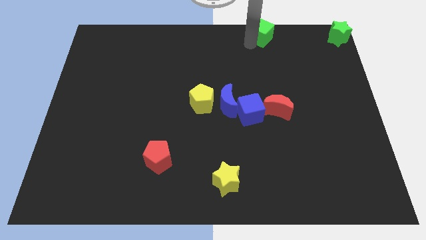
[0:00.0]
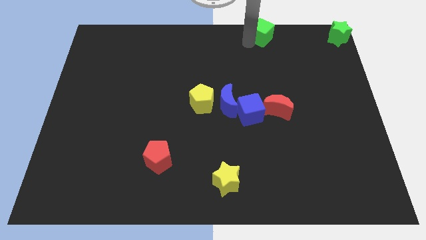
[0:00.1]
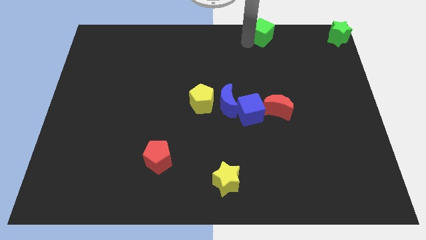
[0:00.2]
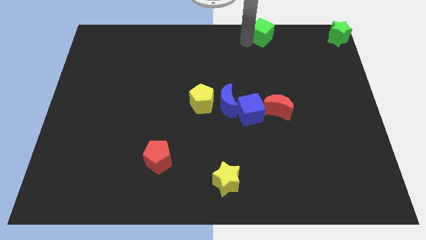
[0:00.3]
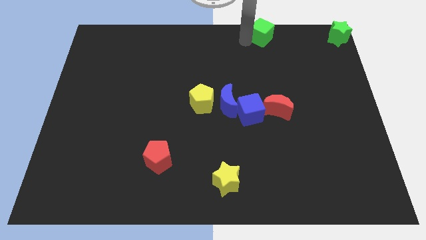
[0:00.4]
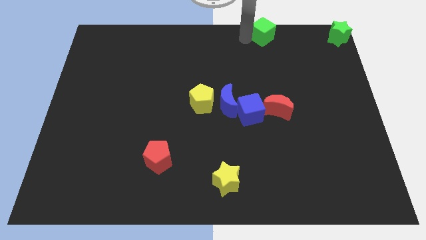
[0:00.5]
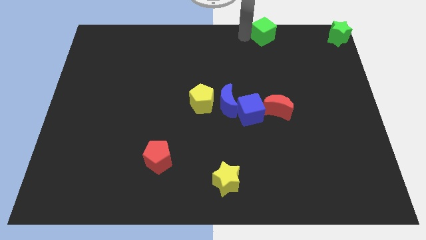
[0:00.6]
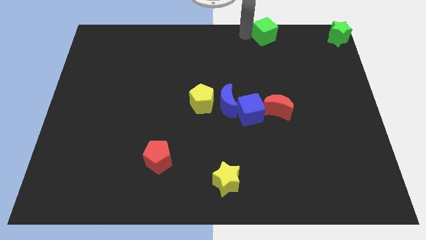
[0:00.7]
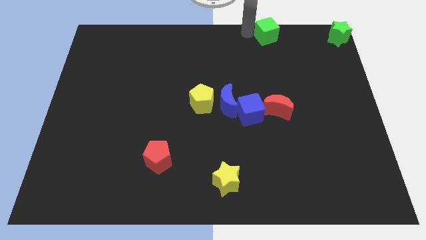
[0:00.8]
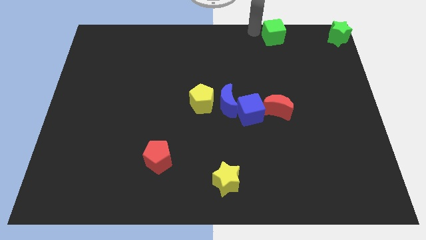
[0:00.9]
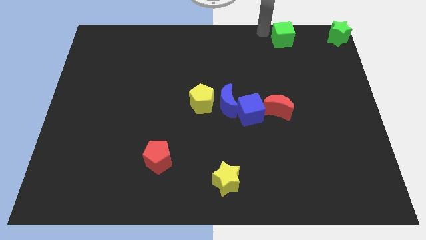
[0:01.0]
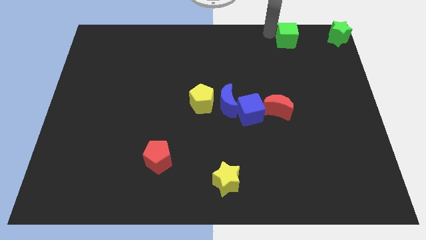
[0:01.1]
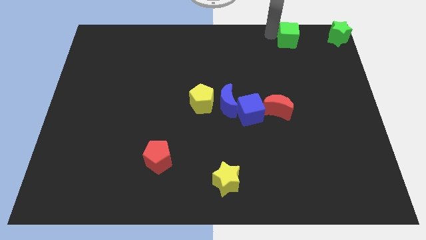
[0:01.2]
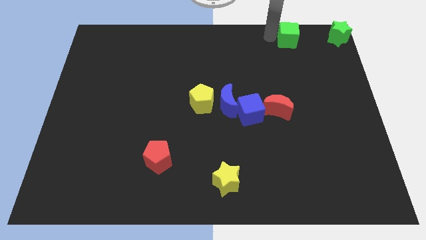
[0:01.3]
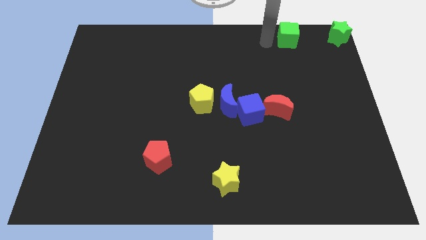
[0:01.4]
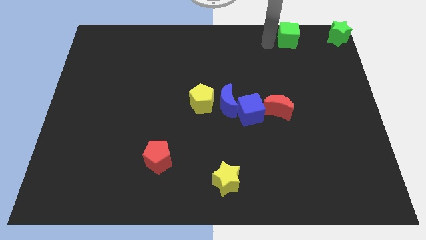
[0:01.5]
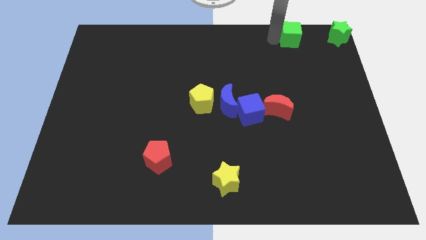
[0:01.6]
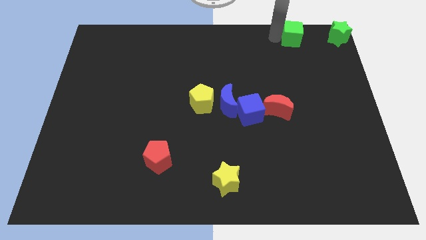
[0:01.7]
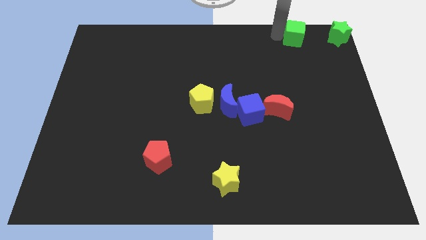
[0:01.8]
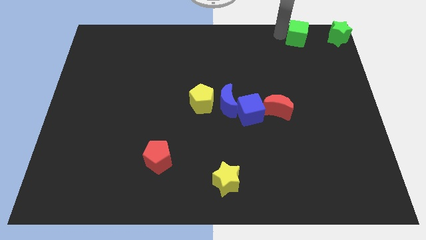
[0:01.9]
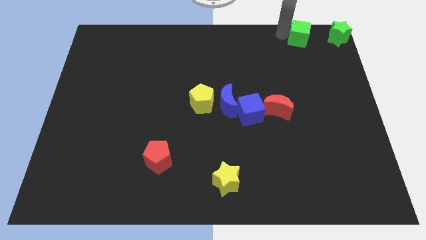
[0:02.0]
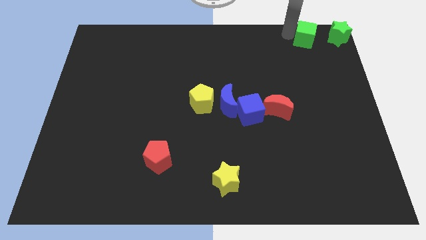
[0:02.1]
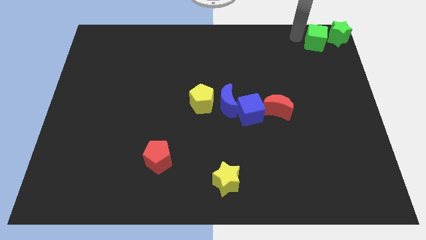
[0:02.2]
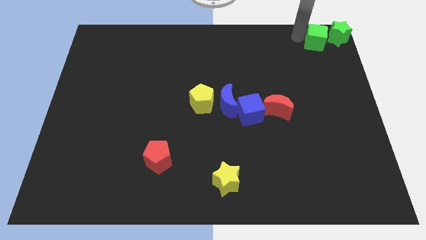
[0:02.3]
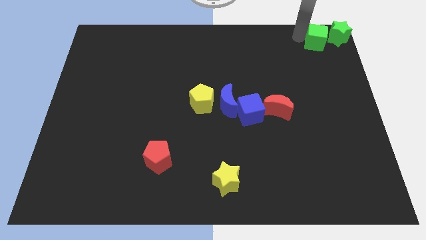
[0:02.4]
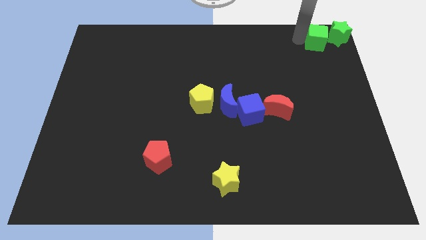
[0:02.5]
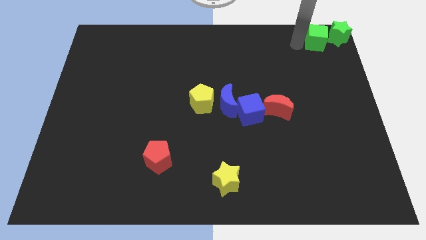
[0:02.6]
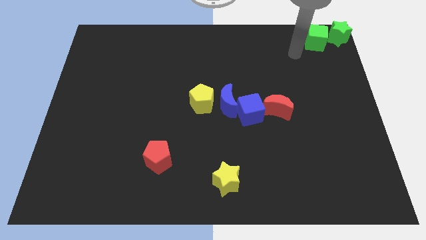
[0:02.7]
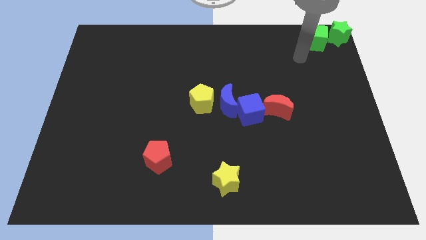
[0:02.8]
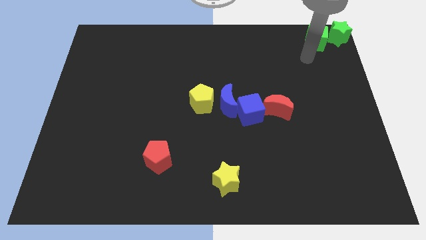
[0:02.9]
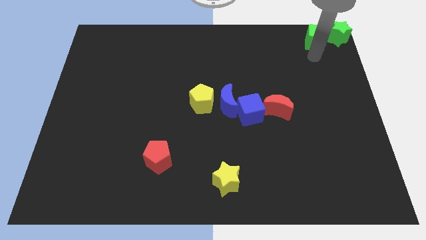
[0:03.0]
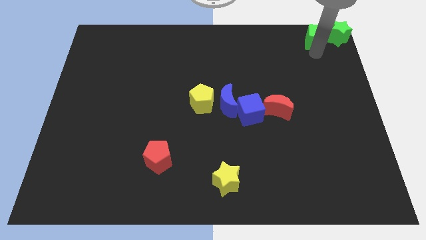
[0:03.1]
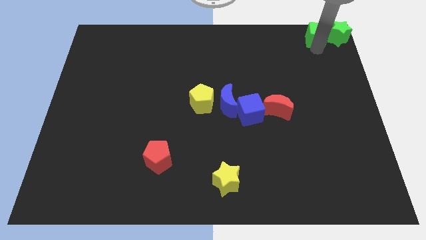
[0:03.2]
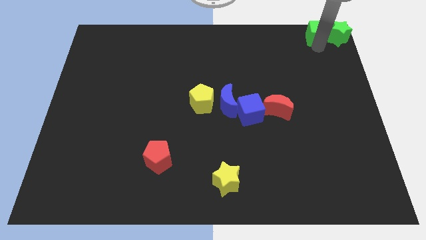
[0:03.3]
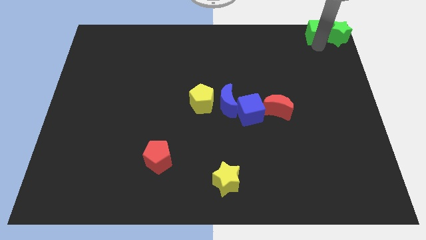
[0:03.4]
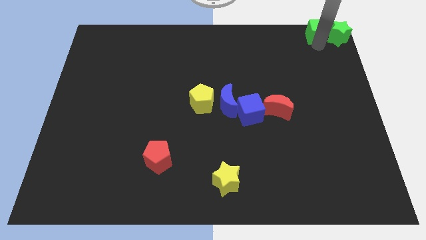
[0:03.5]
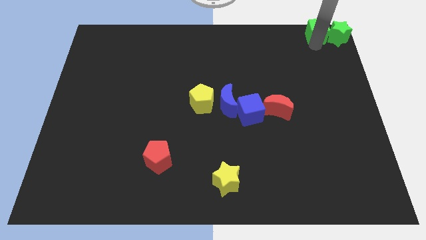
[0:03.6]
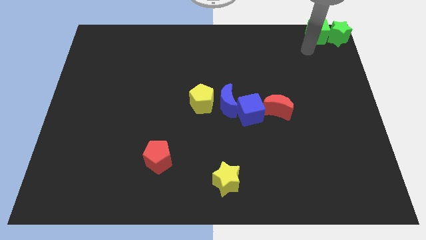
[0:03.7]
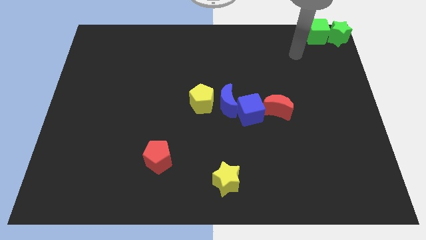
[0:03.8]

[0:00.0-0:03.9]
put the green cube to the left of the green star

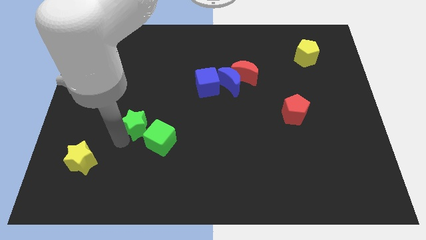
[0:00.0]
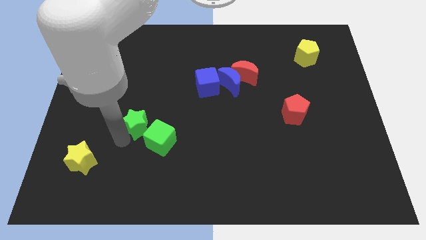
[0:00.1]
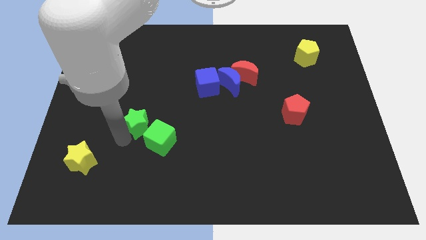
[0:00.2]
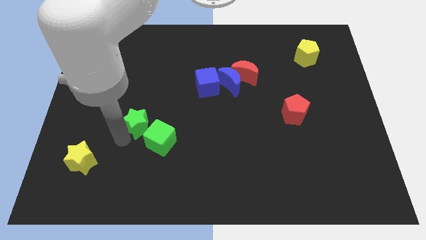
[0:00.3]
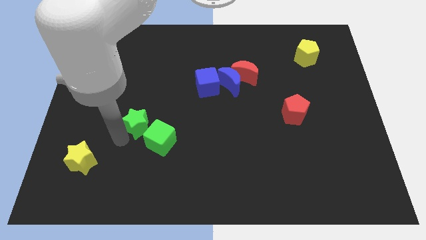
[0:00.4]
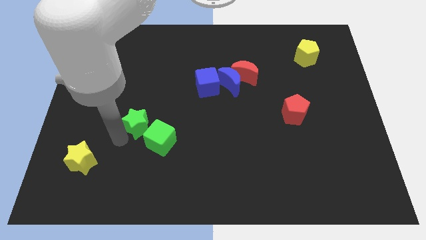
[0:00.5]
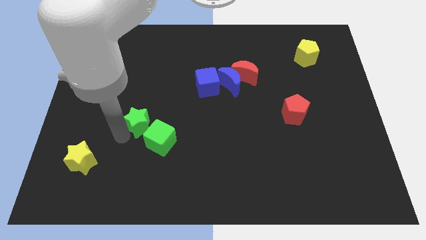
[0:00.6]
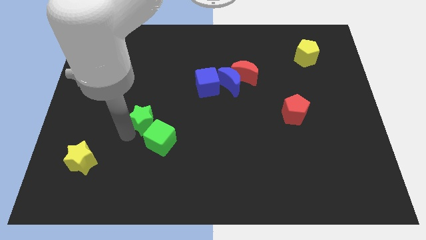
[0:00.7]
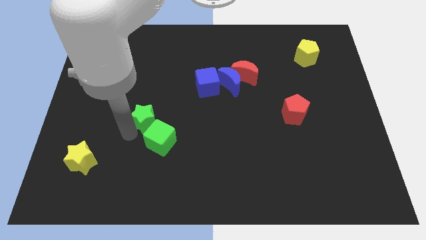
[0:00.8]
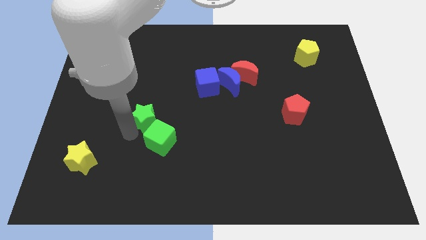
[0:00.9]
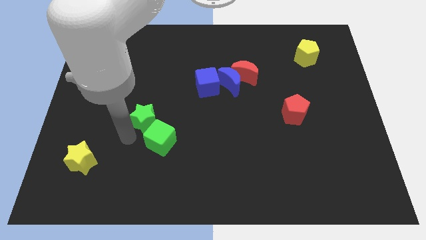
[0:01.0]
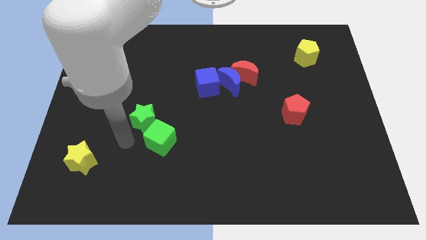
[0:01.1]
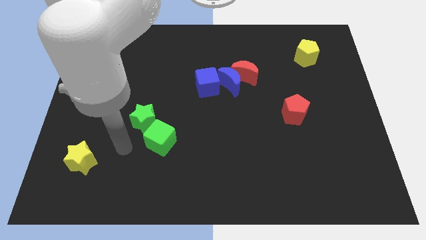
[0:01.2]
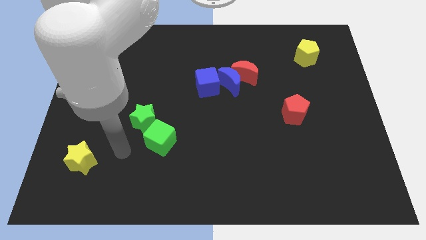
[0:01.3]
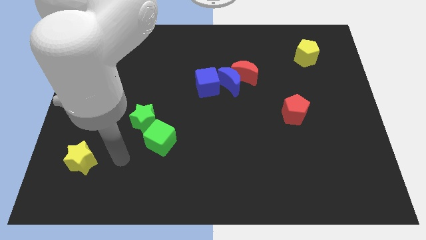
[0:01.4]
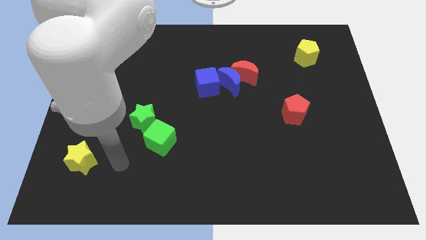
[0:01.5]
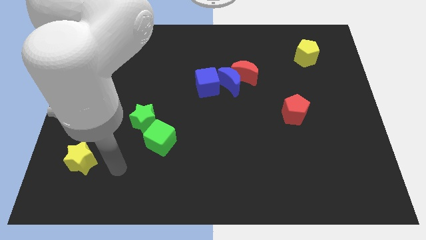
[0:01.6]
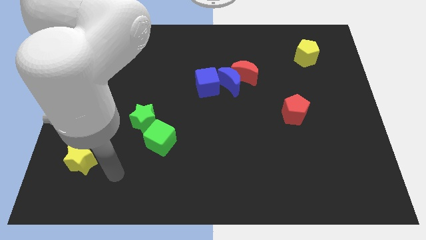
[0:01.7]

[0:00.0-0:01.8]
push the green star diagonally top left to green cube

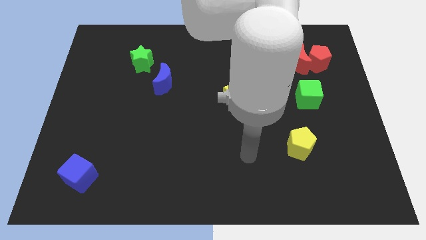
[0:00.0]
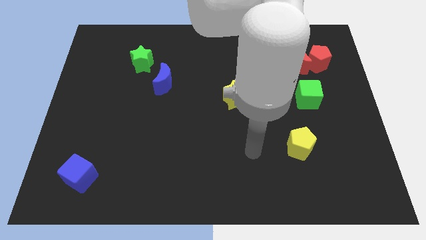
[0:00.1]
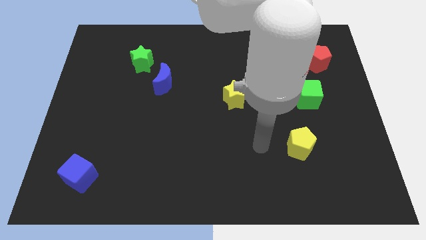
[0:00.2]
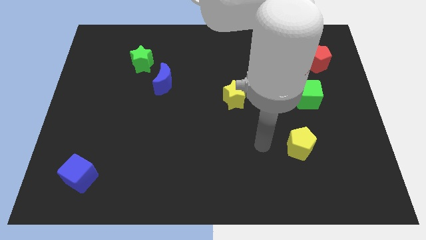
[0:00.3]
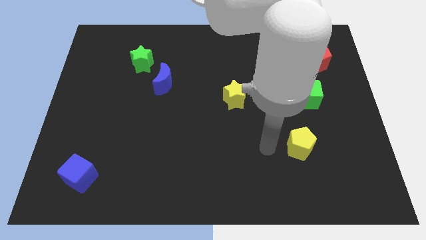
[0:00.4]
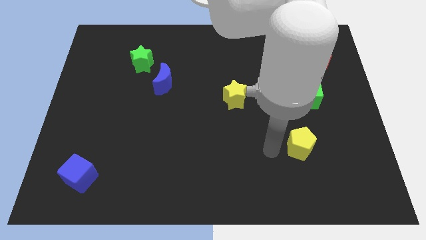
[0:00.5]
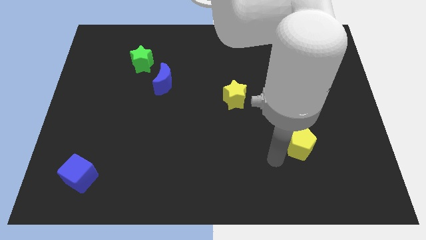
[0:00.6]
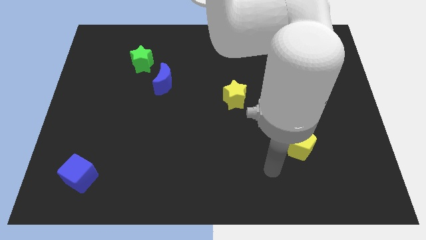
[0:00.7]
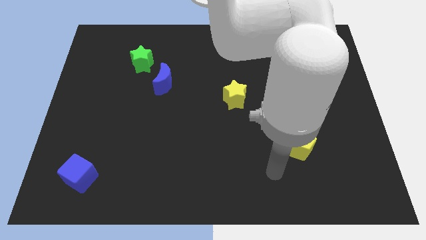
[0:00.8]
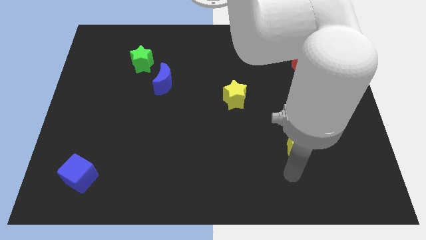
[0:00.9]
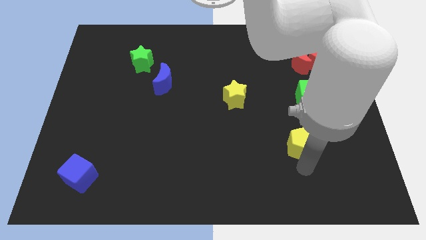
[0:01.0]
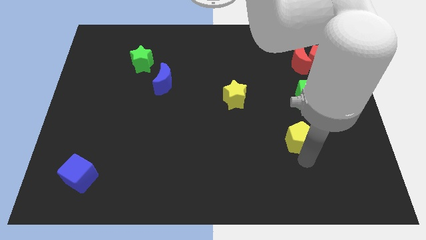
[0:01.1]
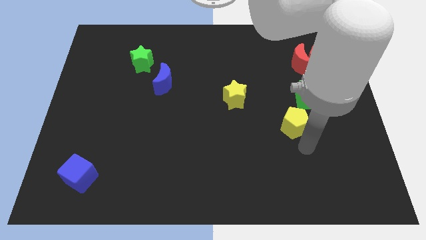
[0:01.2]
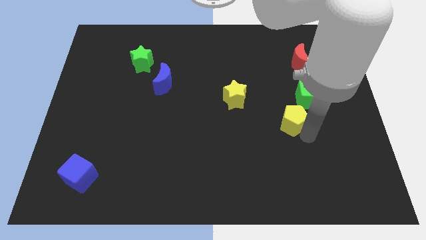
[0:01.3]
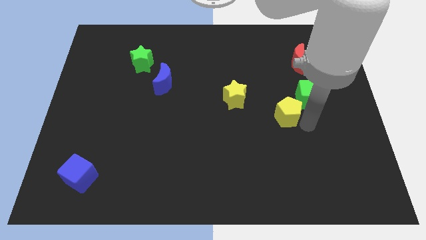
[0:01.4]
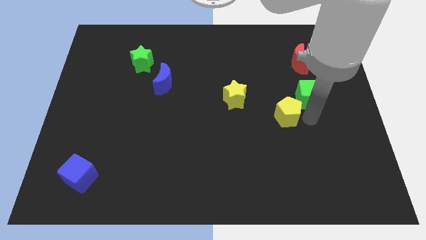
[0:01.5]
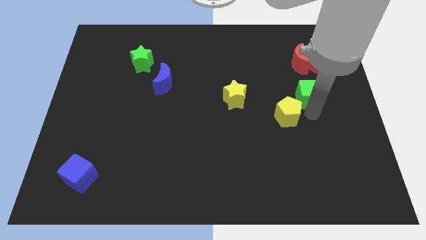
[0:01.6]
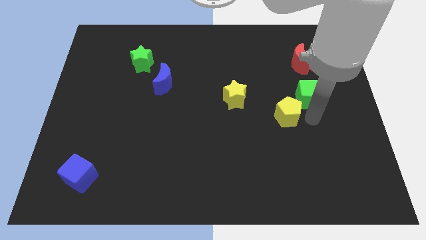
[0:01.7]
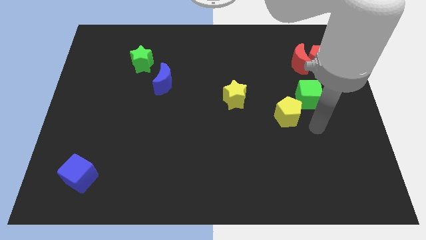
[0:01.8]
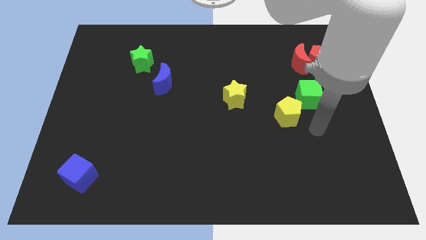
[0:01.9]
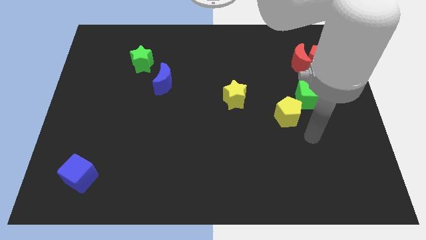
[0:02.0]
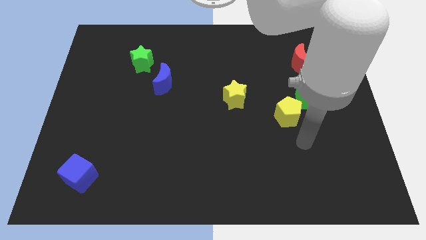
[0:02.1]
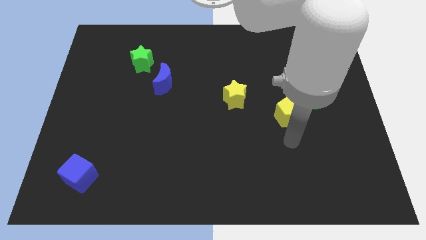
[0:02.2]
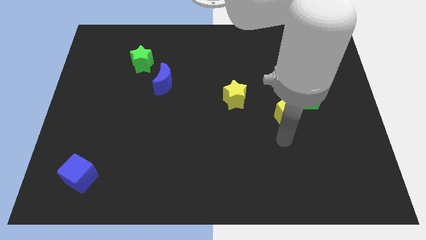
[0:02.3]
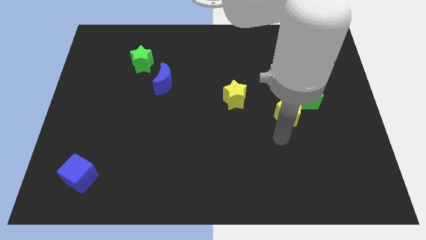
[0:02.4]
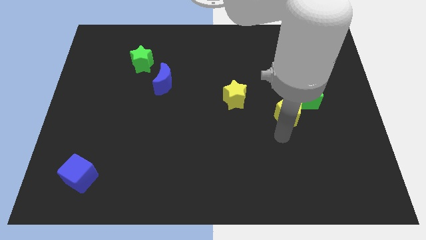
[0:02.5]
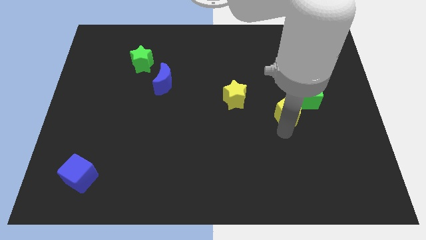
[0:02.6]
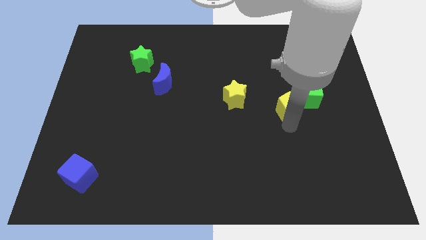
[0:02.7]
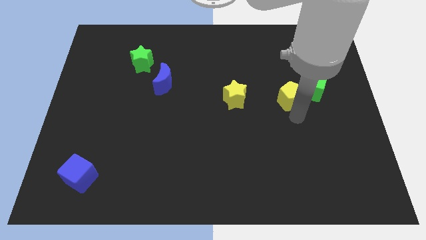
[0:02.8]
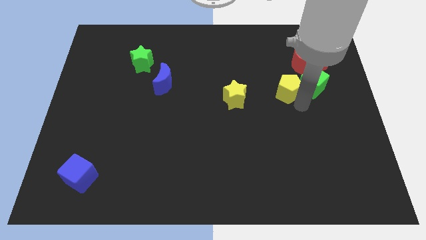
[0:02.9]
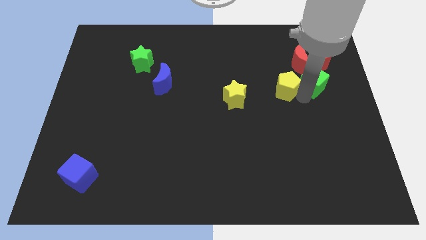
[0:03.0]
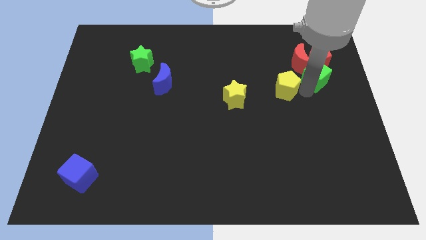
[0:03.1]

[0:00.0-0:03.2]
move the yellow pentagon to the left of the green cube

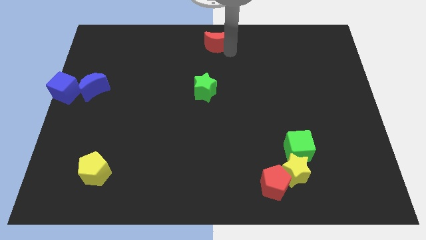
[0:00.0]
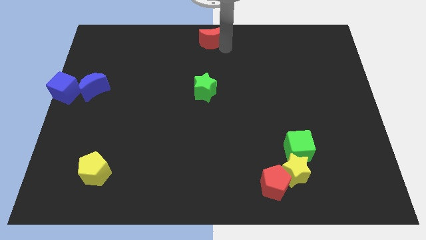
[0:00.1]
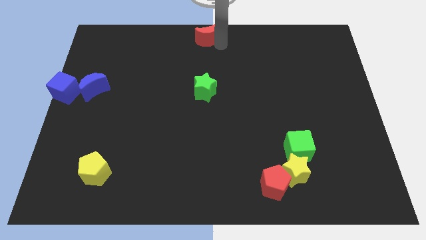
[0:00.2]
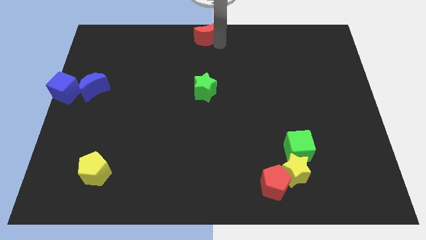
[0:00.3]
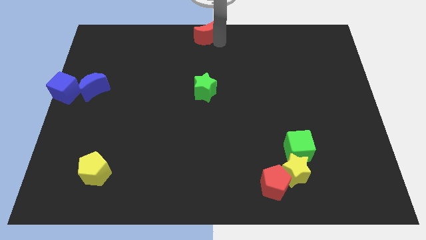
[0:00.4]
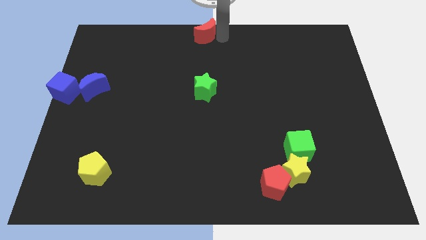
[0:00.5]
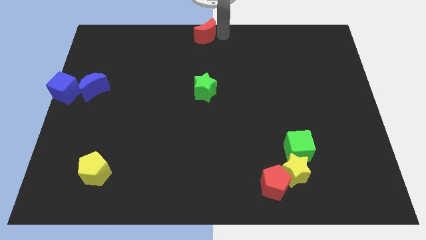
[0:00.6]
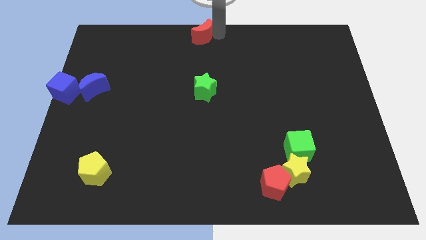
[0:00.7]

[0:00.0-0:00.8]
push red crescent slightly upwards
